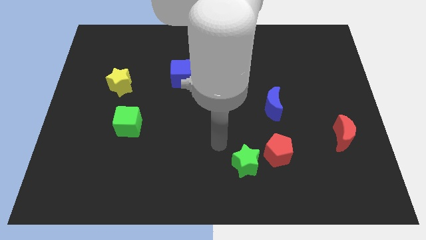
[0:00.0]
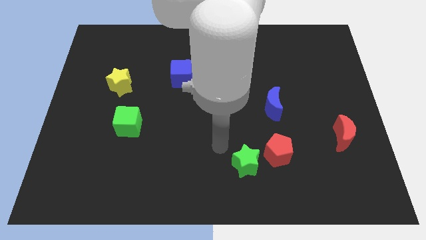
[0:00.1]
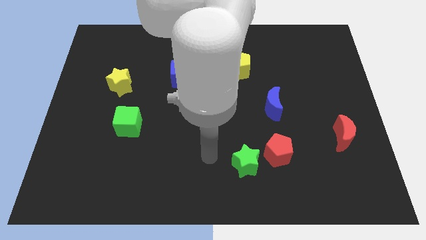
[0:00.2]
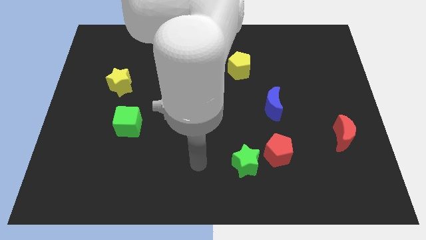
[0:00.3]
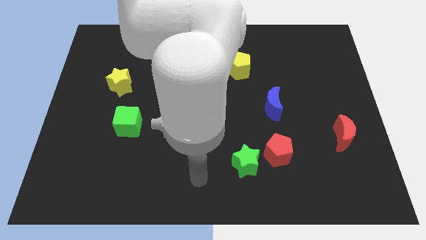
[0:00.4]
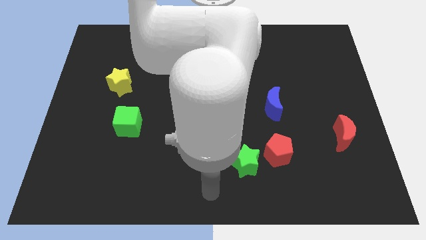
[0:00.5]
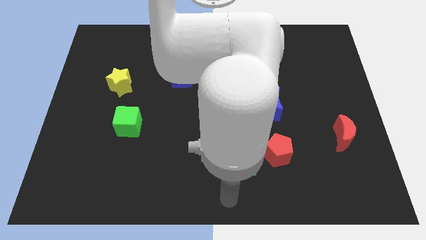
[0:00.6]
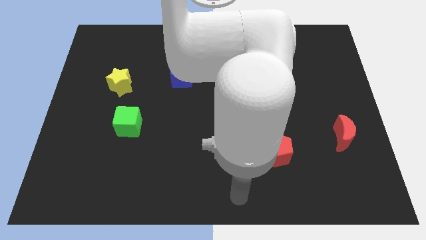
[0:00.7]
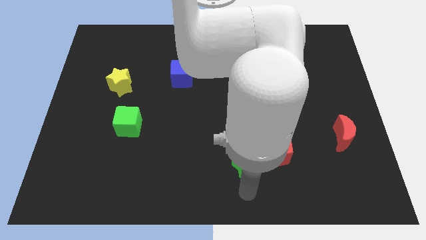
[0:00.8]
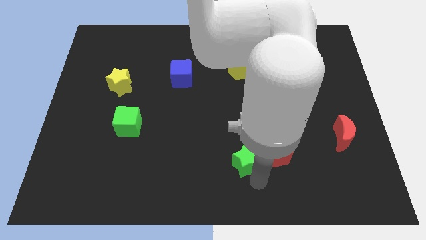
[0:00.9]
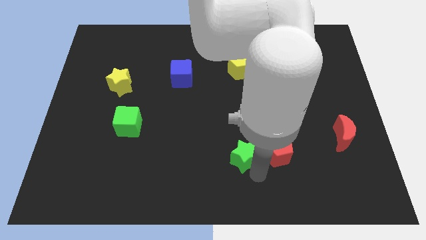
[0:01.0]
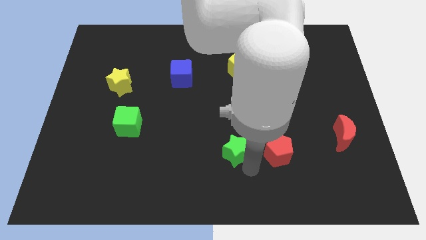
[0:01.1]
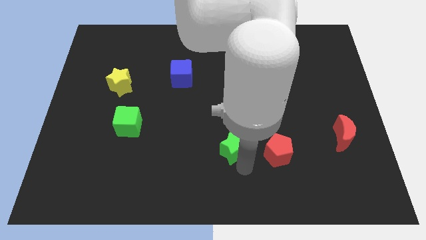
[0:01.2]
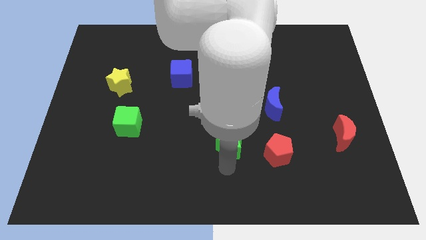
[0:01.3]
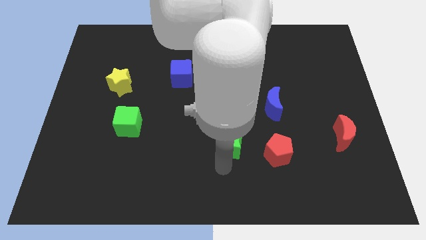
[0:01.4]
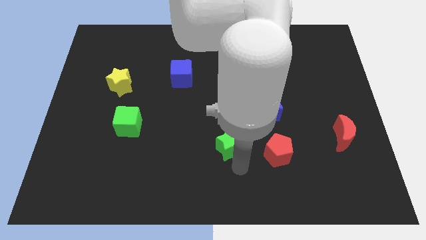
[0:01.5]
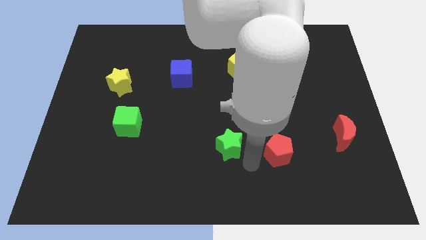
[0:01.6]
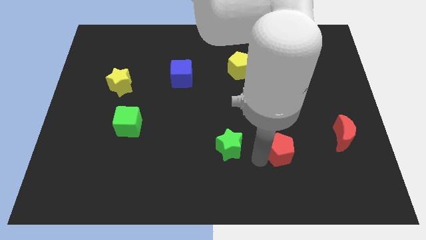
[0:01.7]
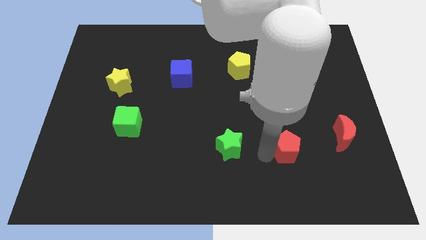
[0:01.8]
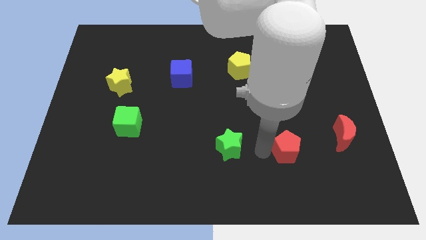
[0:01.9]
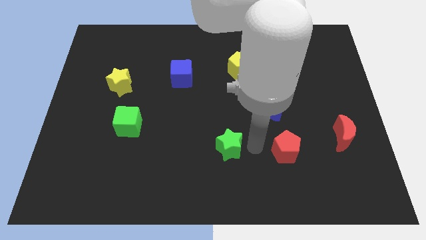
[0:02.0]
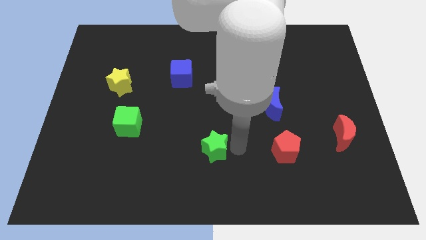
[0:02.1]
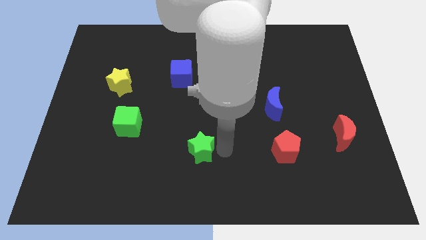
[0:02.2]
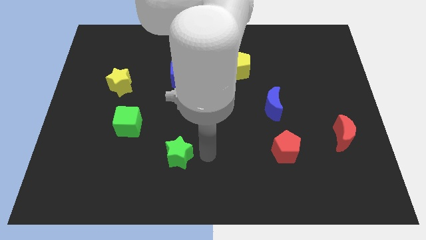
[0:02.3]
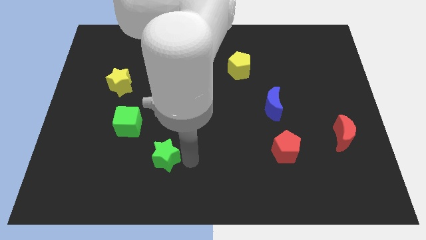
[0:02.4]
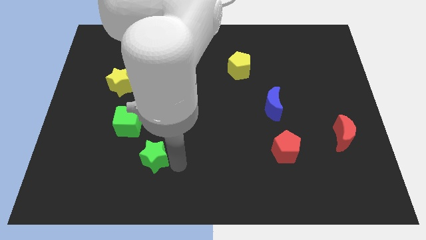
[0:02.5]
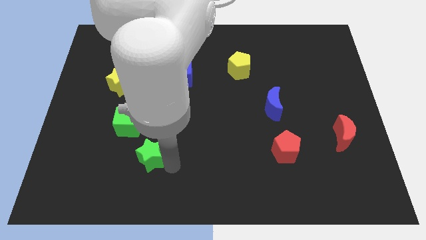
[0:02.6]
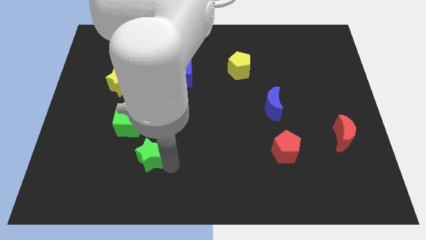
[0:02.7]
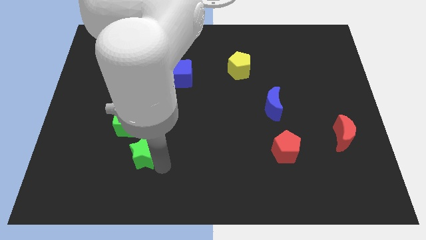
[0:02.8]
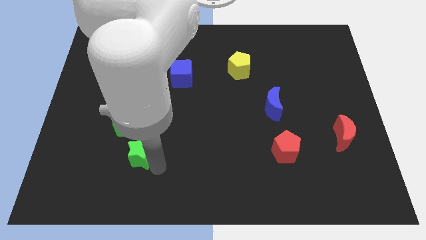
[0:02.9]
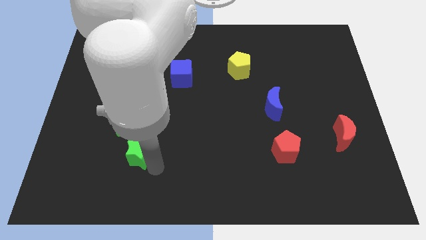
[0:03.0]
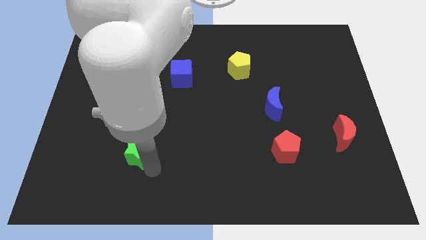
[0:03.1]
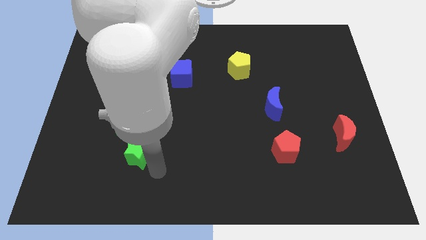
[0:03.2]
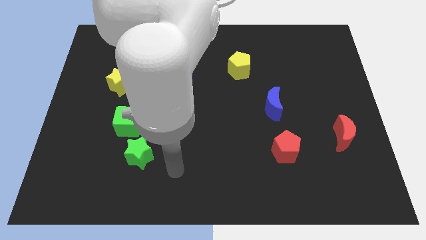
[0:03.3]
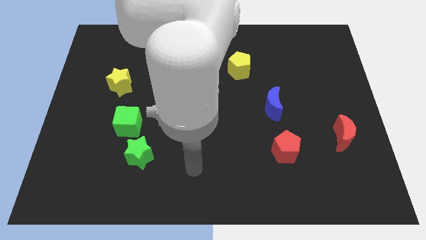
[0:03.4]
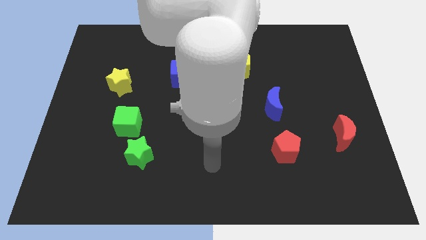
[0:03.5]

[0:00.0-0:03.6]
place the green star to the bottom right of the green cube

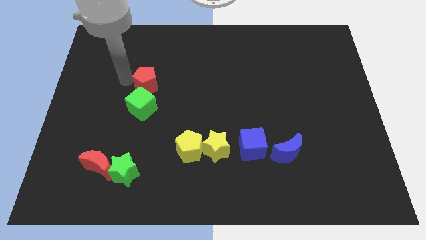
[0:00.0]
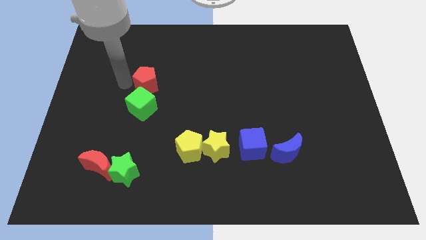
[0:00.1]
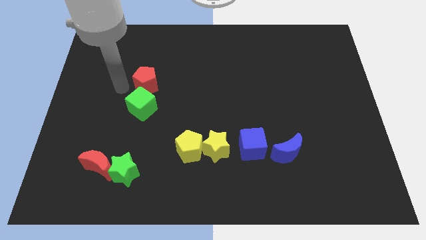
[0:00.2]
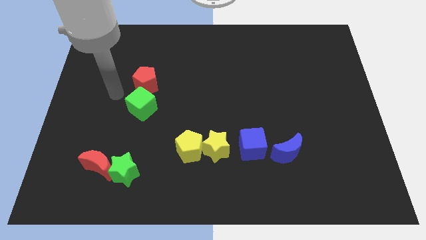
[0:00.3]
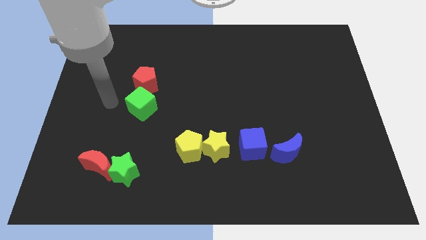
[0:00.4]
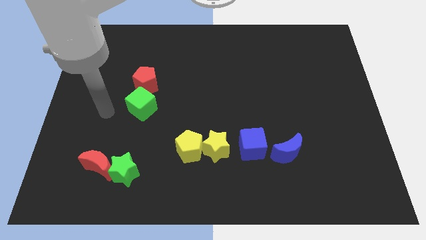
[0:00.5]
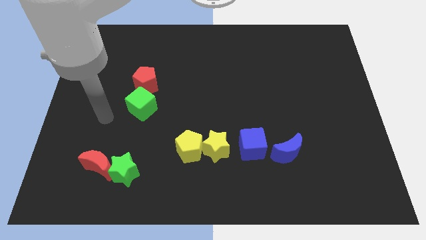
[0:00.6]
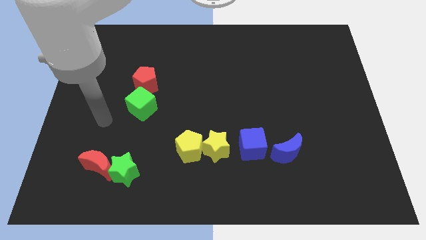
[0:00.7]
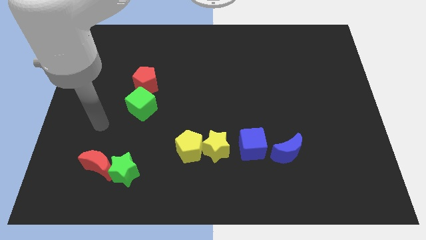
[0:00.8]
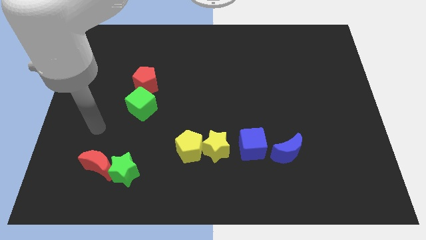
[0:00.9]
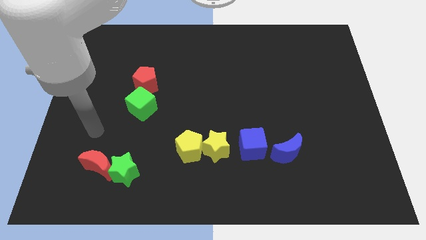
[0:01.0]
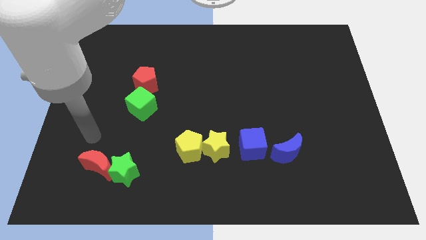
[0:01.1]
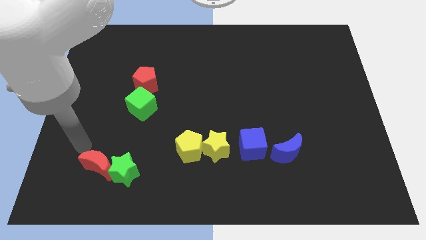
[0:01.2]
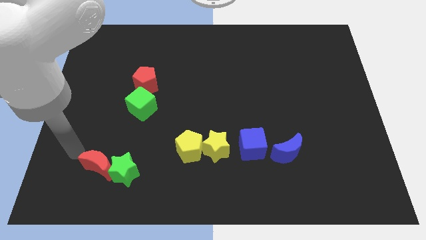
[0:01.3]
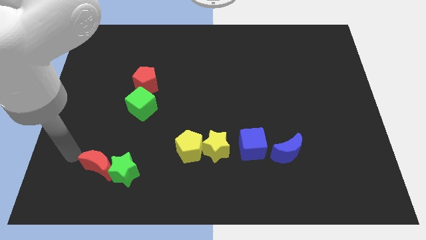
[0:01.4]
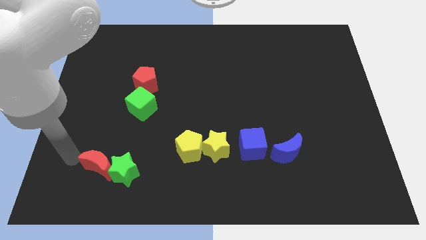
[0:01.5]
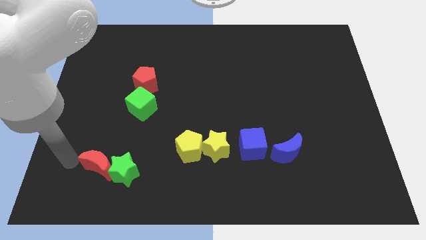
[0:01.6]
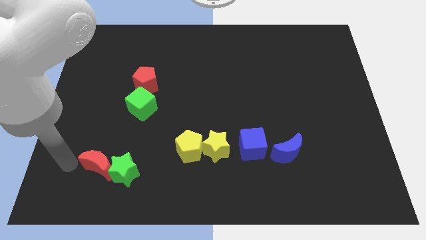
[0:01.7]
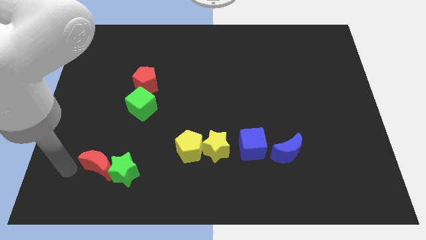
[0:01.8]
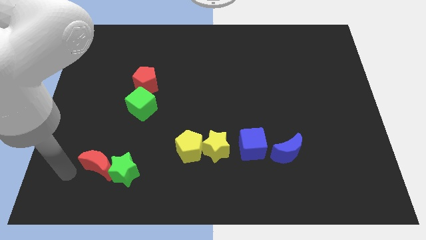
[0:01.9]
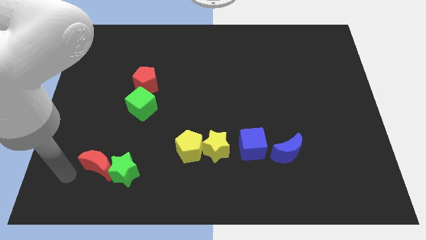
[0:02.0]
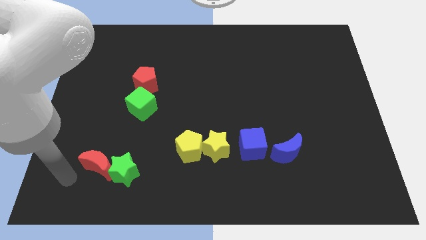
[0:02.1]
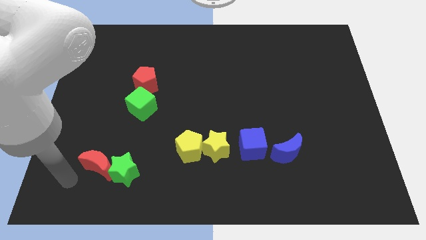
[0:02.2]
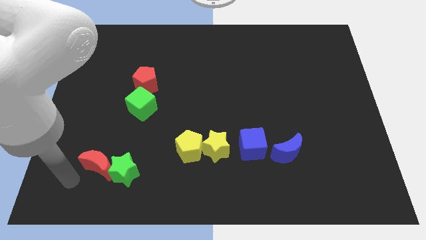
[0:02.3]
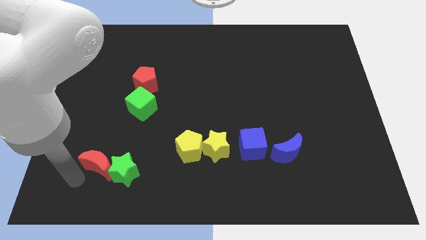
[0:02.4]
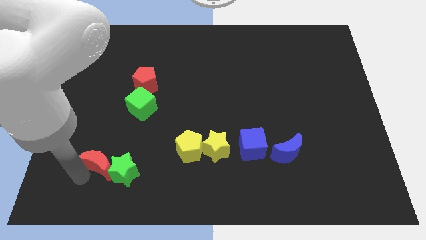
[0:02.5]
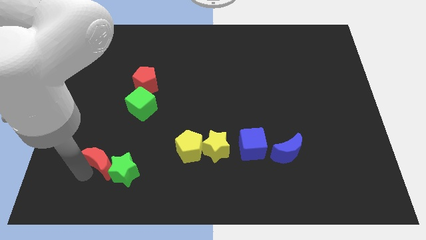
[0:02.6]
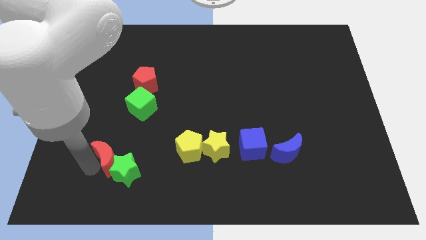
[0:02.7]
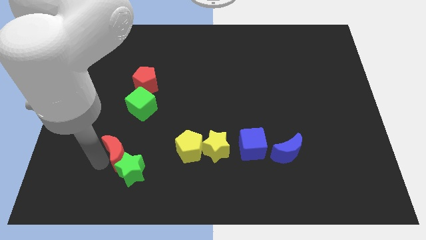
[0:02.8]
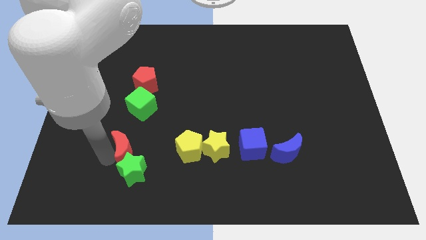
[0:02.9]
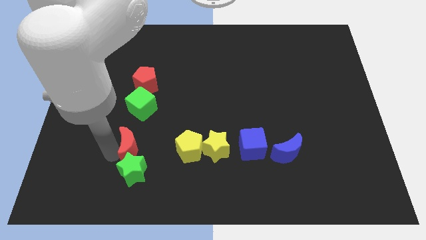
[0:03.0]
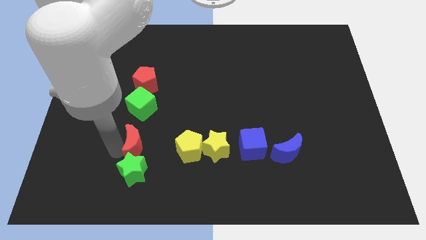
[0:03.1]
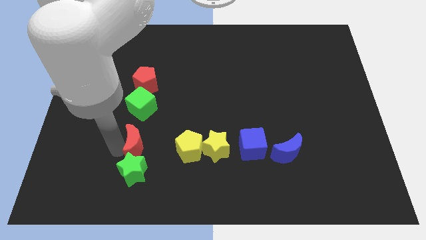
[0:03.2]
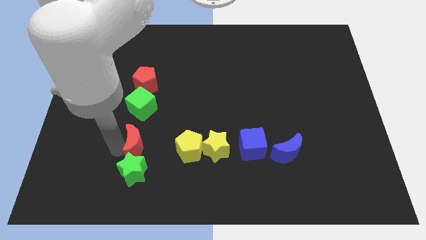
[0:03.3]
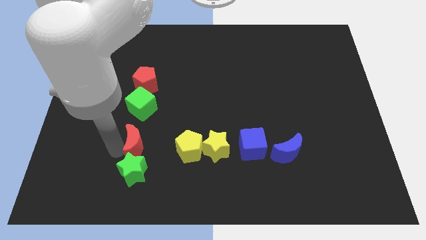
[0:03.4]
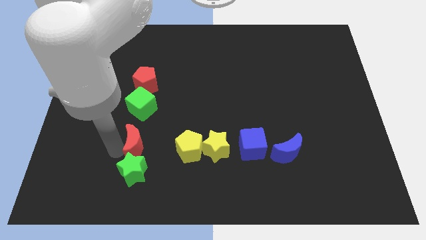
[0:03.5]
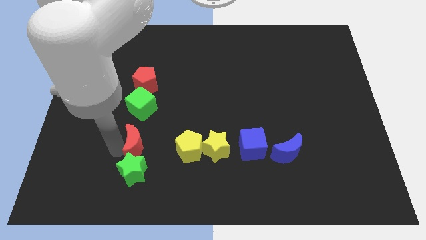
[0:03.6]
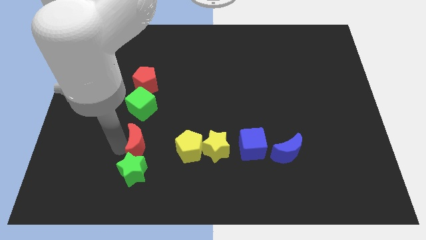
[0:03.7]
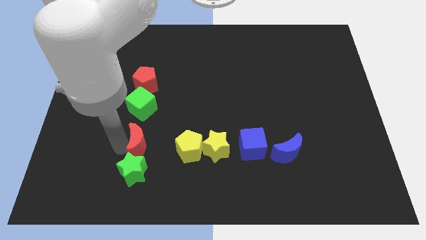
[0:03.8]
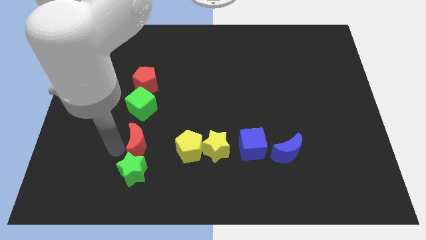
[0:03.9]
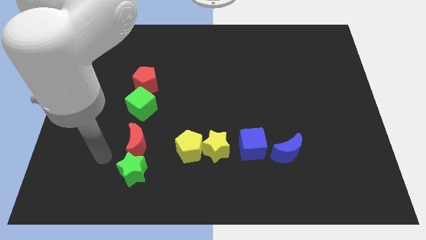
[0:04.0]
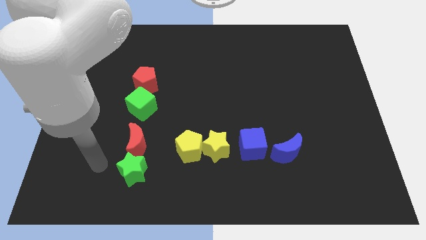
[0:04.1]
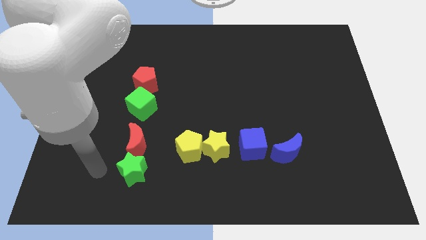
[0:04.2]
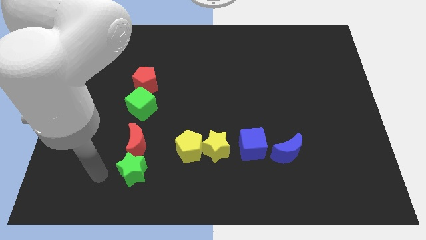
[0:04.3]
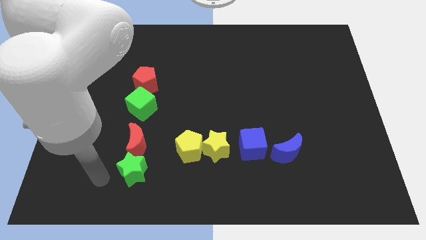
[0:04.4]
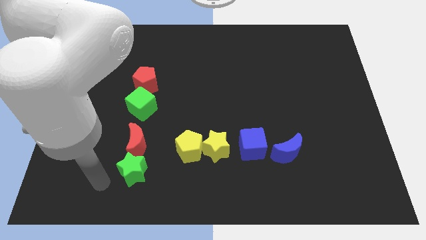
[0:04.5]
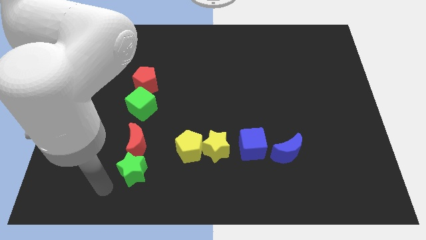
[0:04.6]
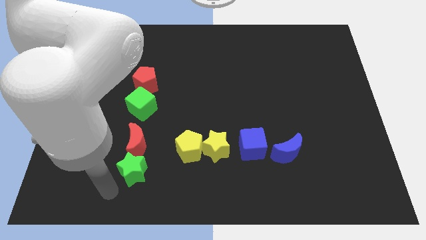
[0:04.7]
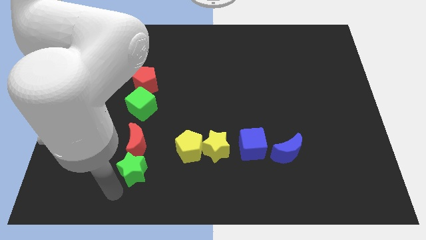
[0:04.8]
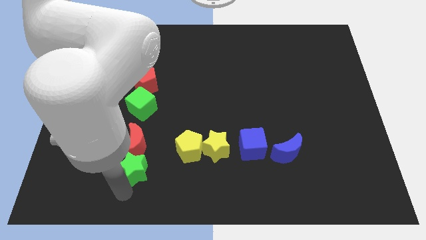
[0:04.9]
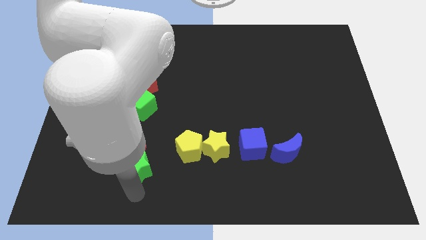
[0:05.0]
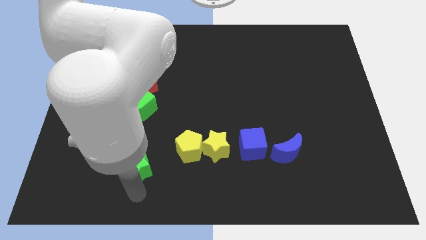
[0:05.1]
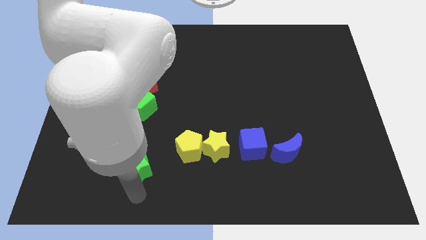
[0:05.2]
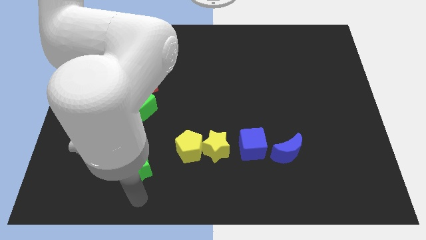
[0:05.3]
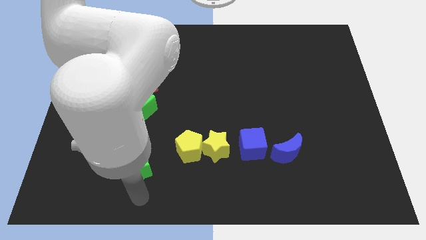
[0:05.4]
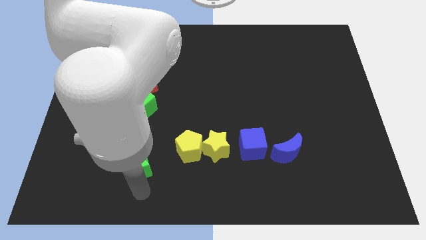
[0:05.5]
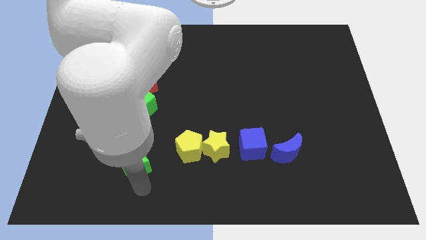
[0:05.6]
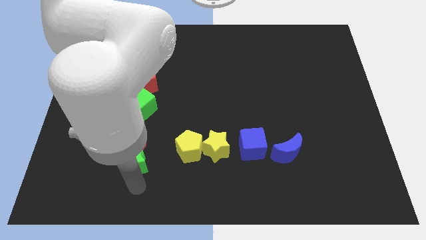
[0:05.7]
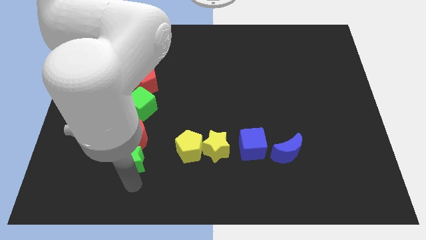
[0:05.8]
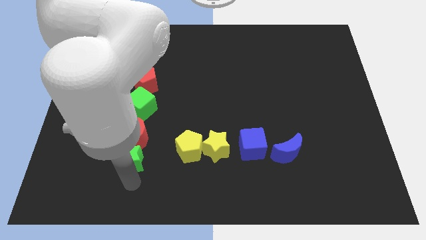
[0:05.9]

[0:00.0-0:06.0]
place the red crescent and green star at the bottom side of the green cube
